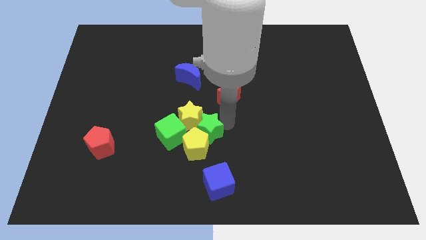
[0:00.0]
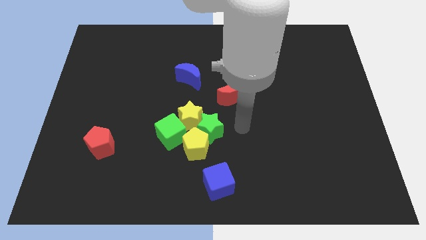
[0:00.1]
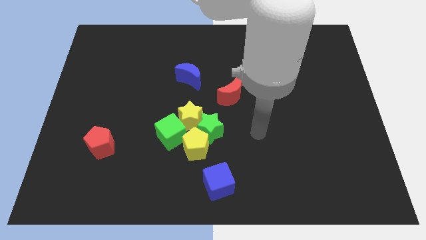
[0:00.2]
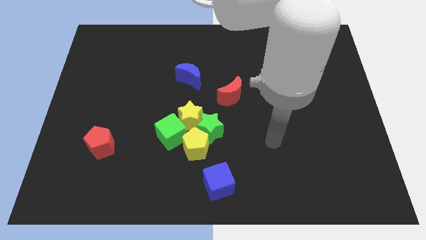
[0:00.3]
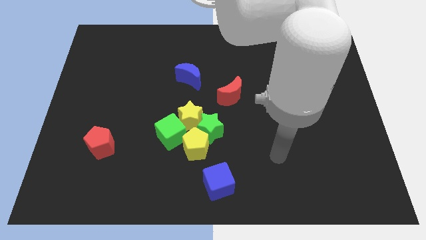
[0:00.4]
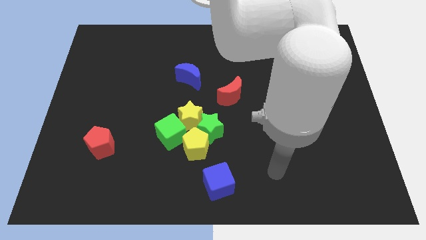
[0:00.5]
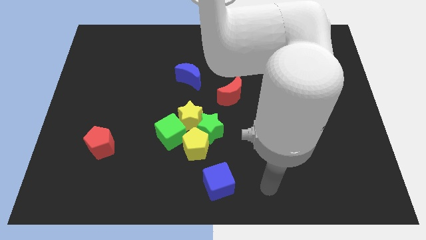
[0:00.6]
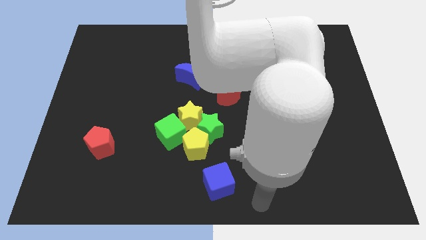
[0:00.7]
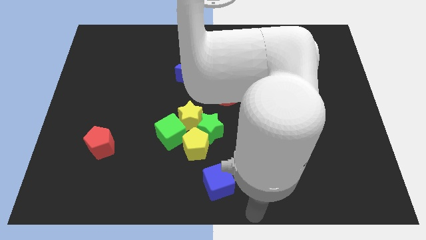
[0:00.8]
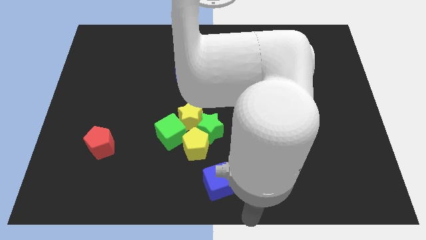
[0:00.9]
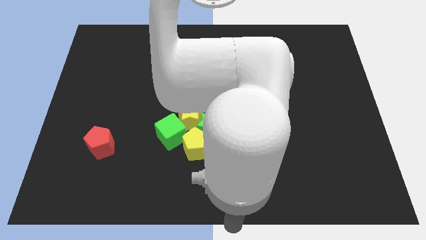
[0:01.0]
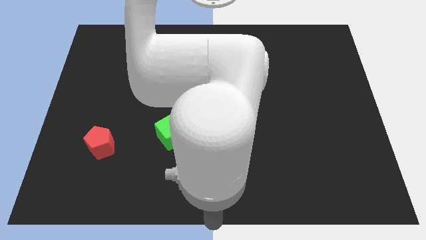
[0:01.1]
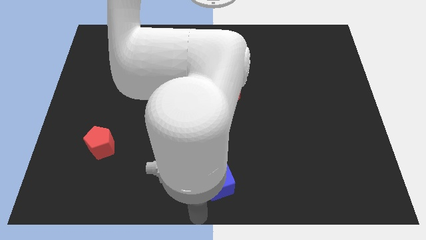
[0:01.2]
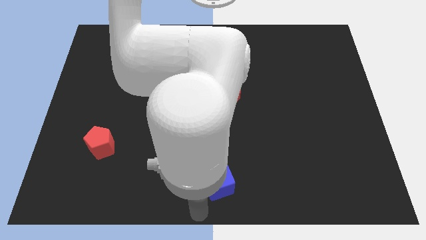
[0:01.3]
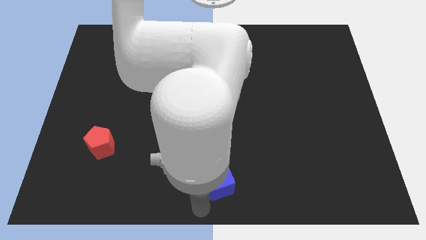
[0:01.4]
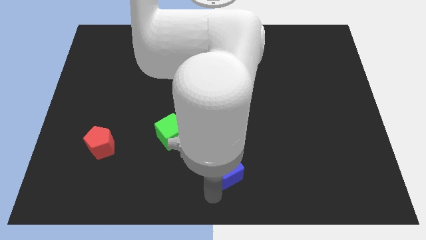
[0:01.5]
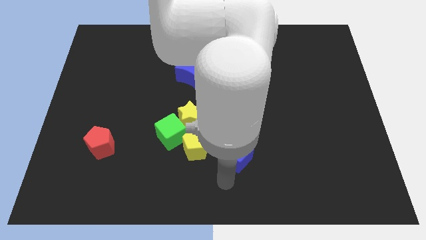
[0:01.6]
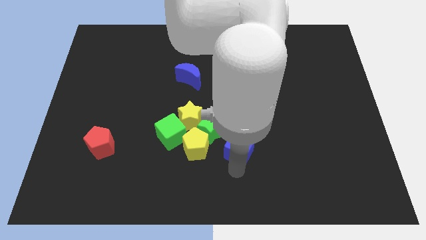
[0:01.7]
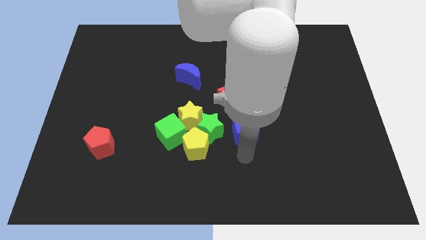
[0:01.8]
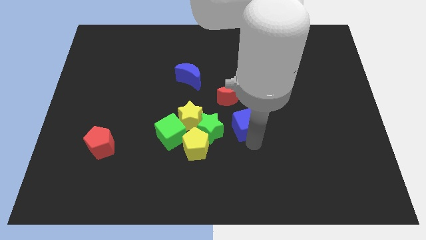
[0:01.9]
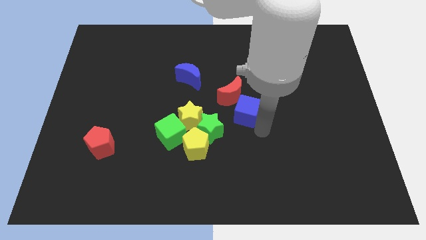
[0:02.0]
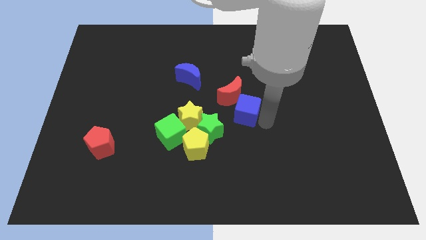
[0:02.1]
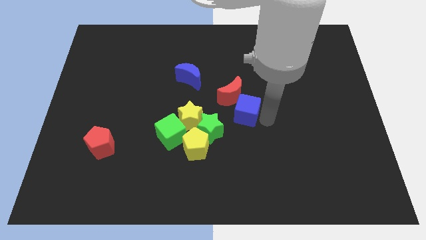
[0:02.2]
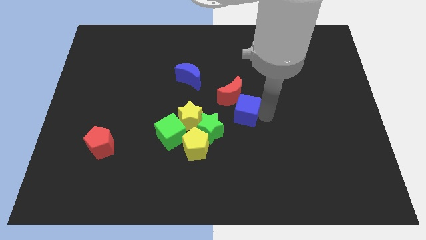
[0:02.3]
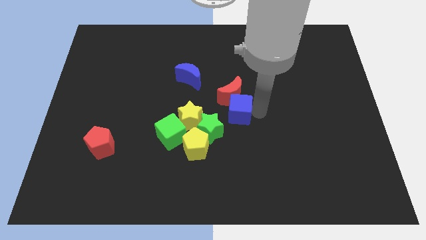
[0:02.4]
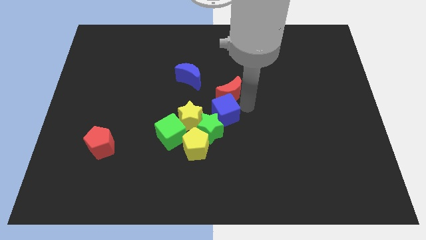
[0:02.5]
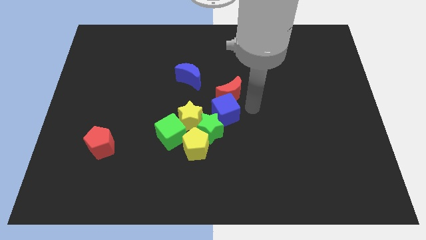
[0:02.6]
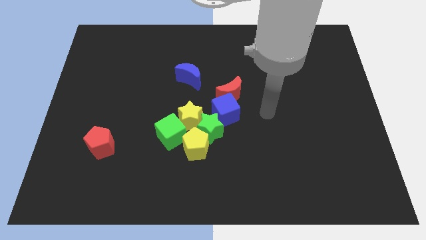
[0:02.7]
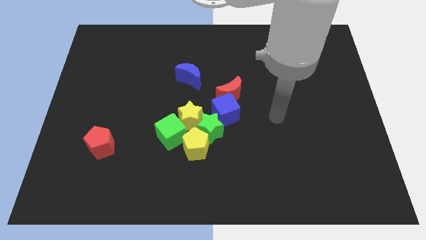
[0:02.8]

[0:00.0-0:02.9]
put the blue cube at the top right side of green star

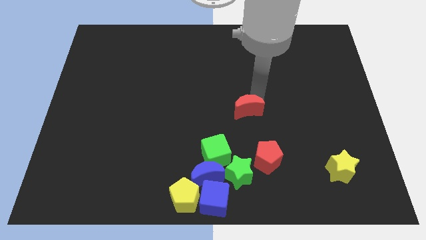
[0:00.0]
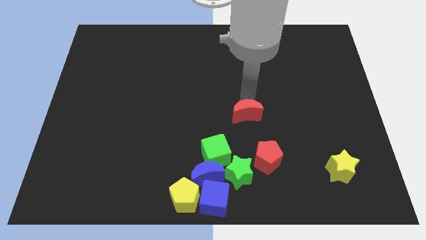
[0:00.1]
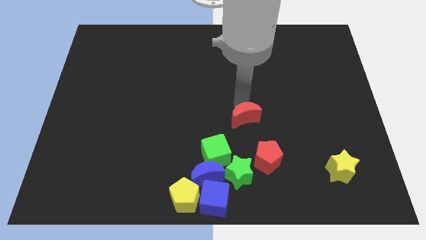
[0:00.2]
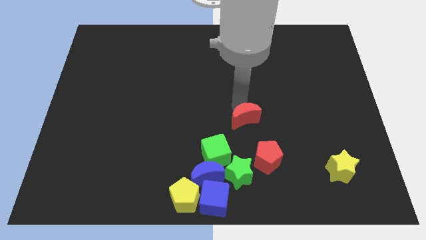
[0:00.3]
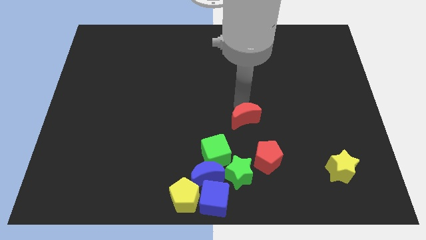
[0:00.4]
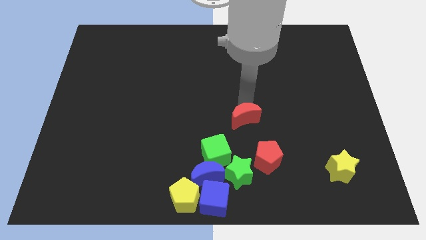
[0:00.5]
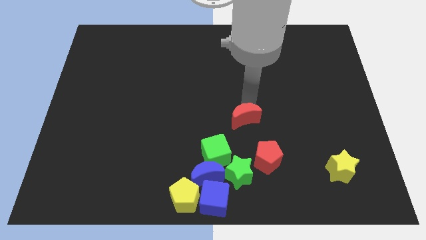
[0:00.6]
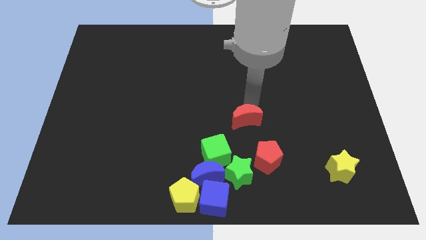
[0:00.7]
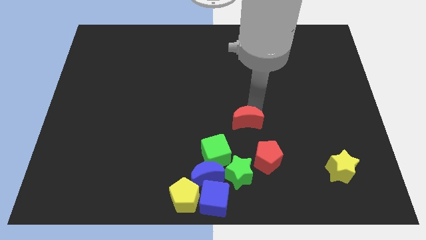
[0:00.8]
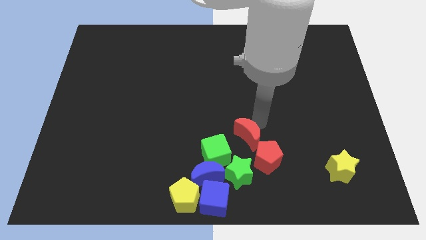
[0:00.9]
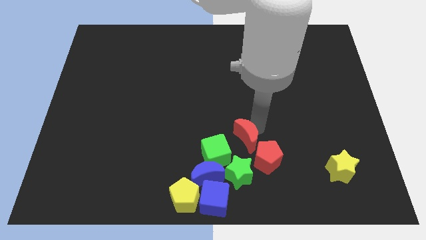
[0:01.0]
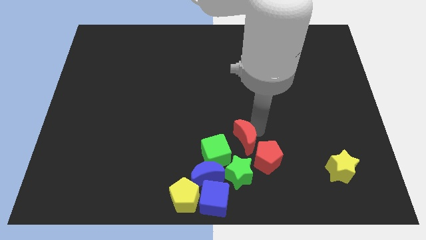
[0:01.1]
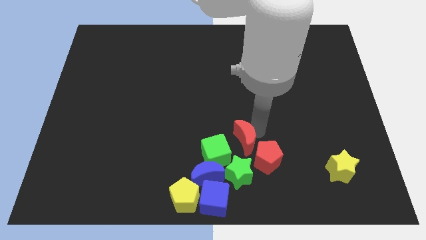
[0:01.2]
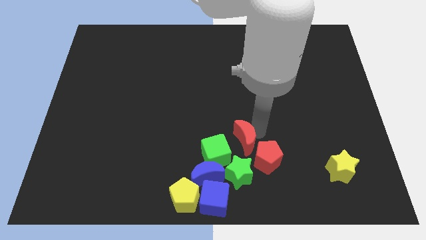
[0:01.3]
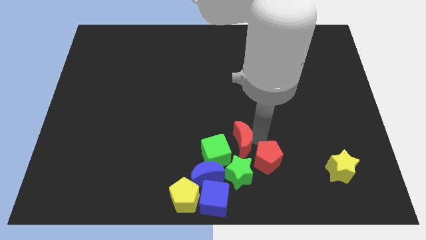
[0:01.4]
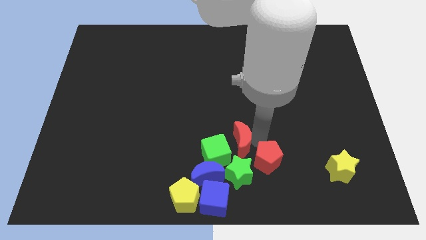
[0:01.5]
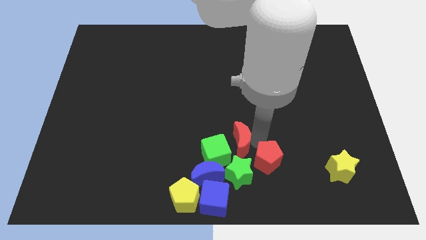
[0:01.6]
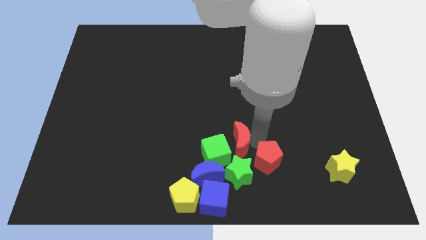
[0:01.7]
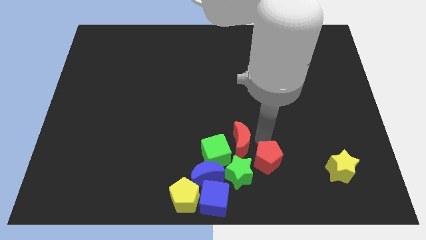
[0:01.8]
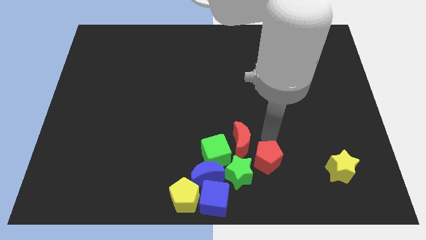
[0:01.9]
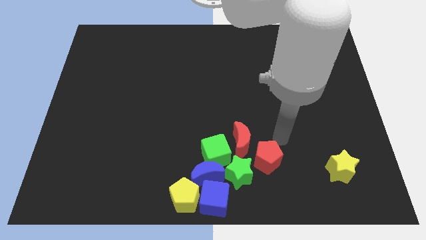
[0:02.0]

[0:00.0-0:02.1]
move red moon to the group of blocks

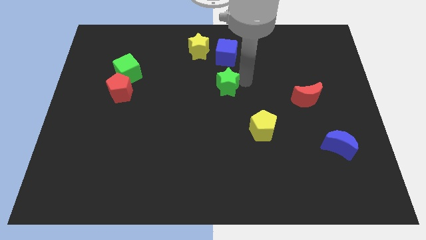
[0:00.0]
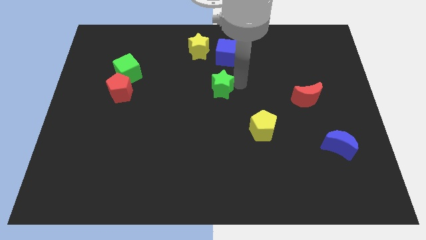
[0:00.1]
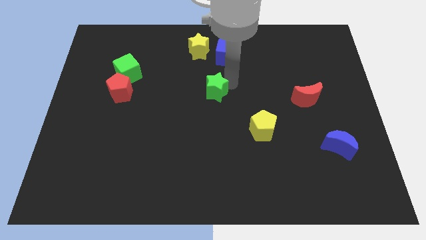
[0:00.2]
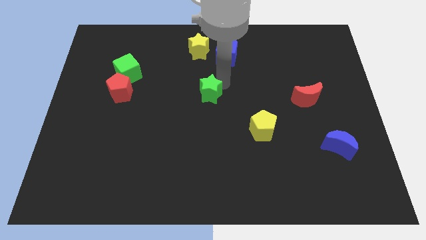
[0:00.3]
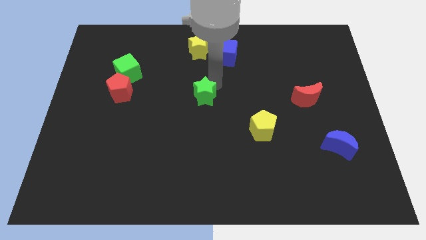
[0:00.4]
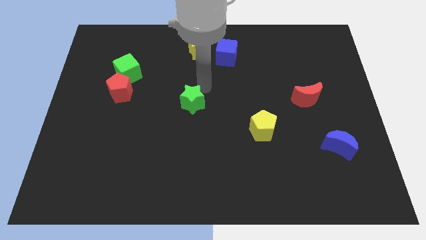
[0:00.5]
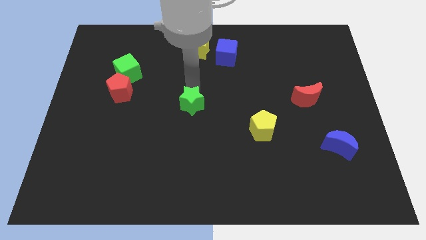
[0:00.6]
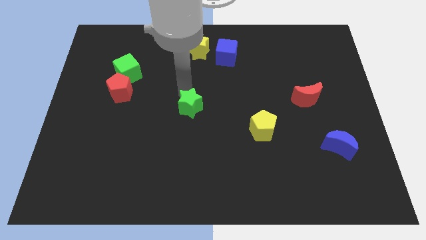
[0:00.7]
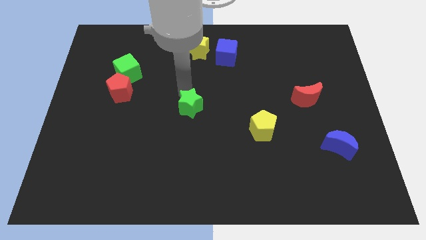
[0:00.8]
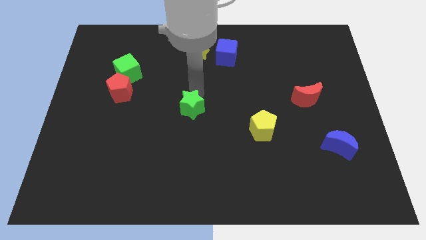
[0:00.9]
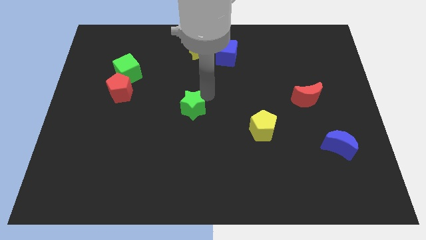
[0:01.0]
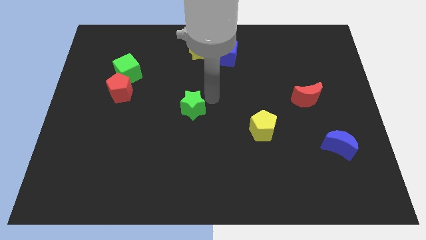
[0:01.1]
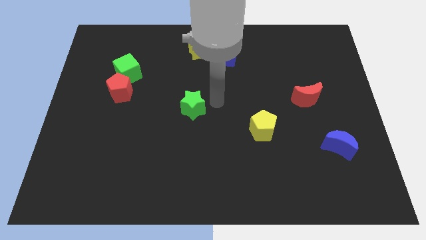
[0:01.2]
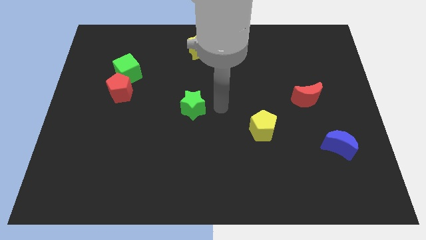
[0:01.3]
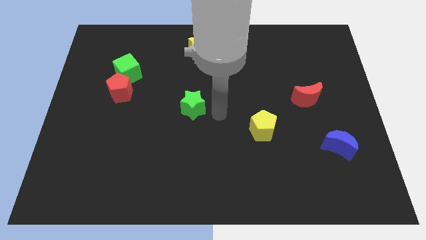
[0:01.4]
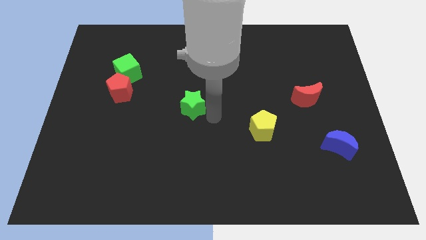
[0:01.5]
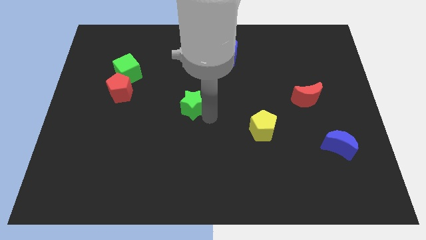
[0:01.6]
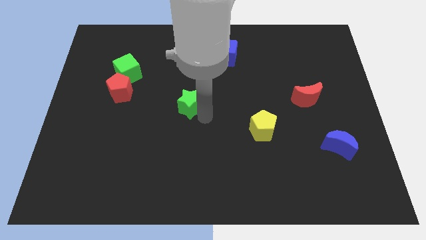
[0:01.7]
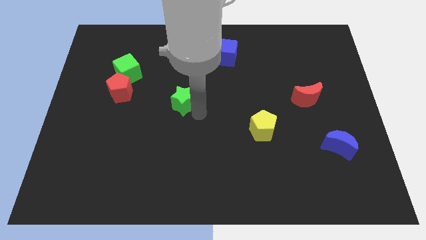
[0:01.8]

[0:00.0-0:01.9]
put the green star between the green cube and yellow pentagon

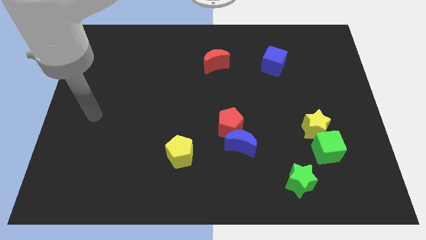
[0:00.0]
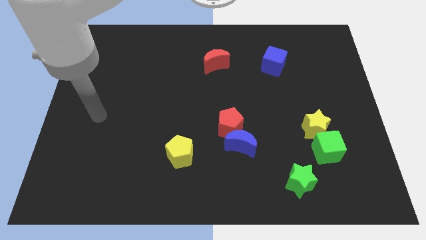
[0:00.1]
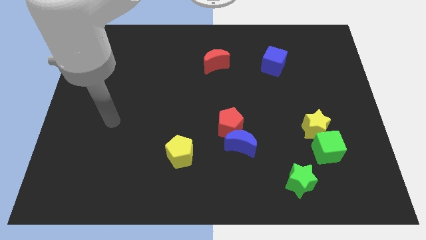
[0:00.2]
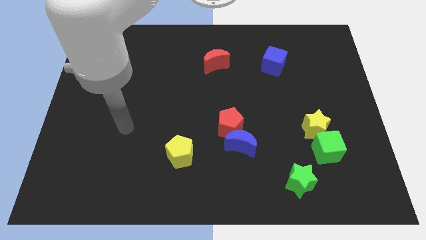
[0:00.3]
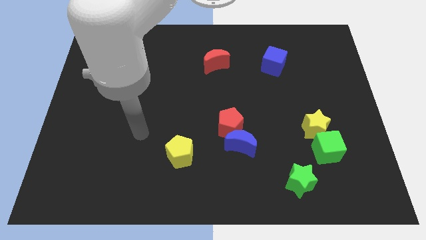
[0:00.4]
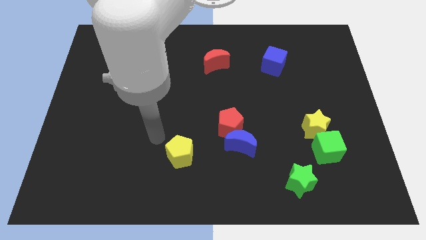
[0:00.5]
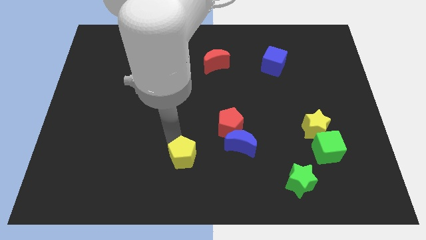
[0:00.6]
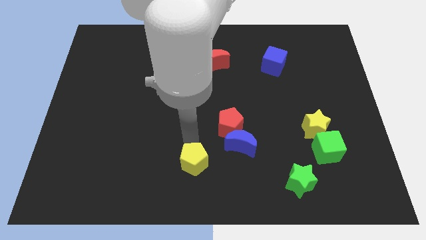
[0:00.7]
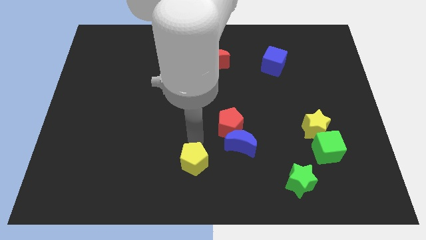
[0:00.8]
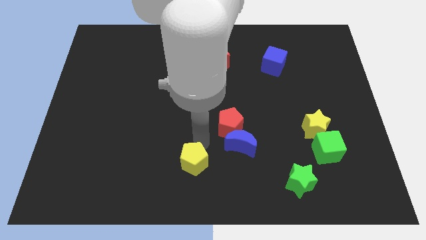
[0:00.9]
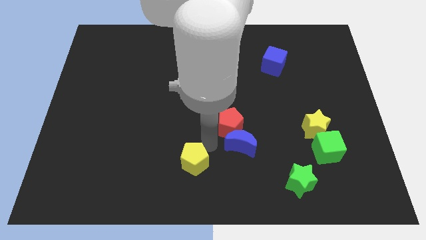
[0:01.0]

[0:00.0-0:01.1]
move the yellow pentagon slightly to the right side

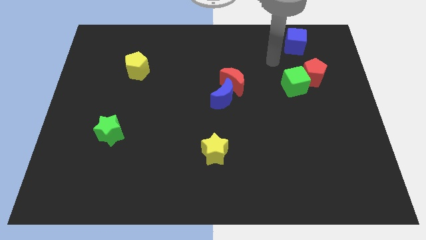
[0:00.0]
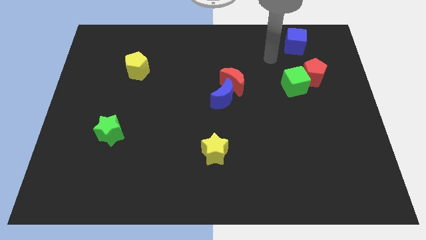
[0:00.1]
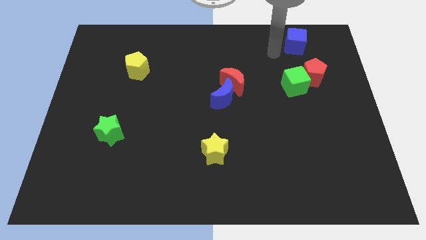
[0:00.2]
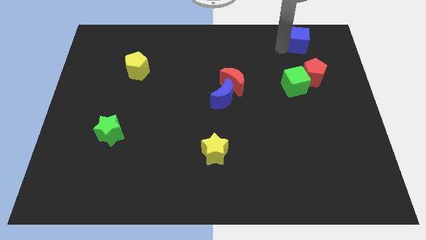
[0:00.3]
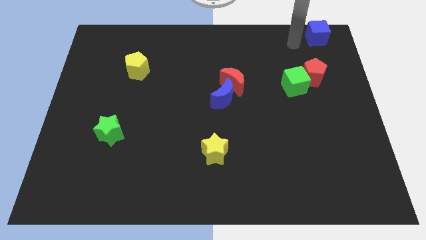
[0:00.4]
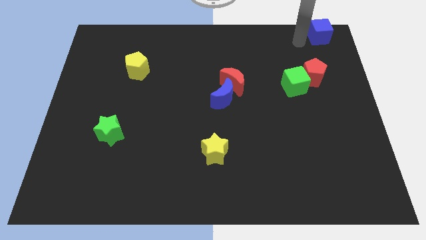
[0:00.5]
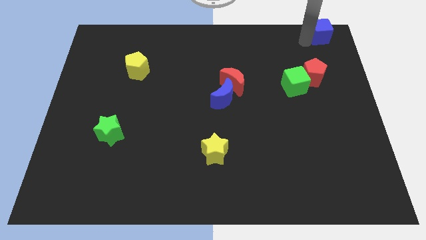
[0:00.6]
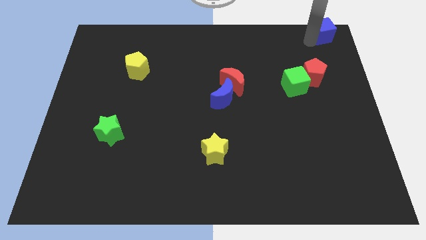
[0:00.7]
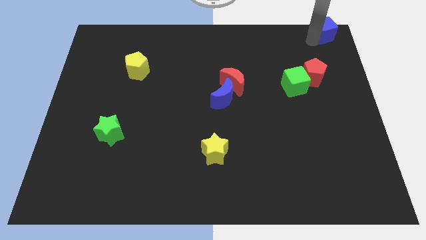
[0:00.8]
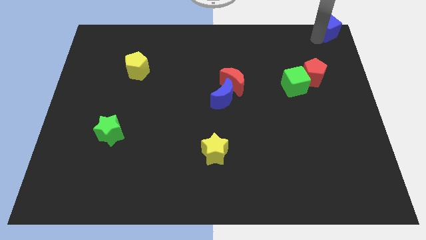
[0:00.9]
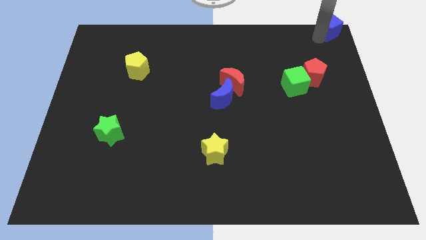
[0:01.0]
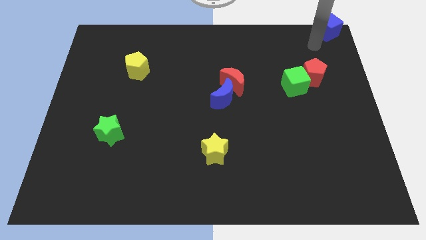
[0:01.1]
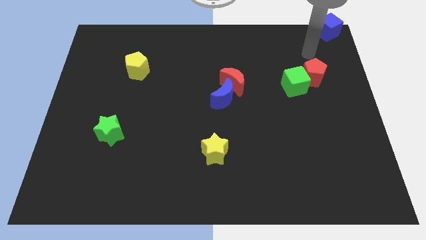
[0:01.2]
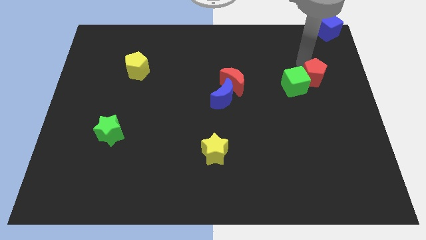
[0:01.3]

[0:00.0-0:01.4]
push the blue cube to the top right corner of the board
